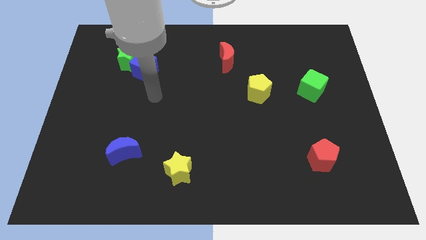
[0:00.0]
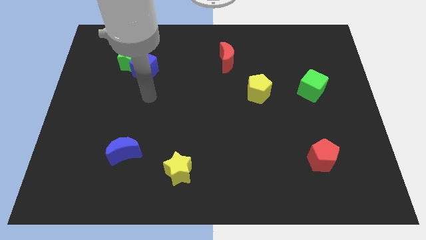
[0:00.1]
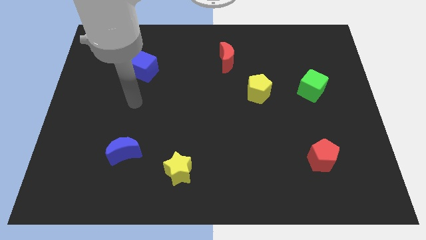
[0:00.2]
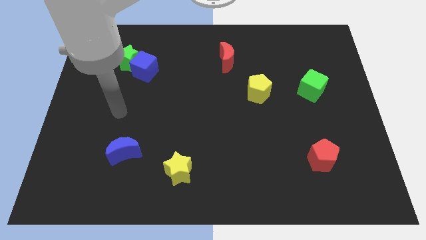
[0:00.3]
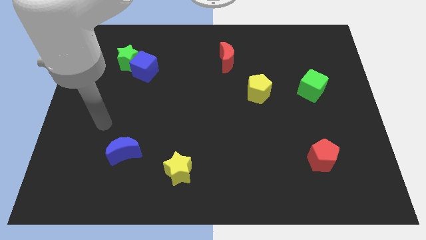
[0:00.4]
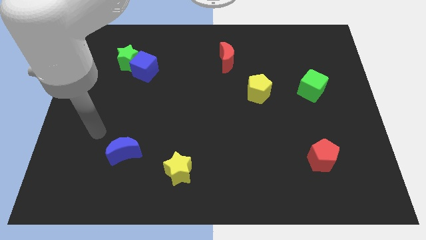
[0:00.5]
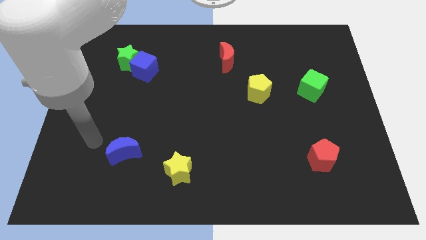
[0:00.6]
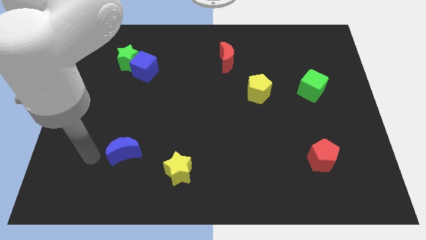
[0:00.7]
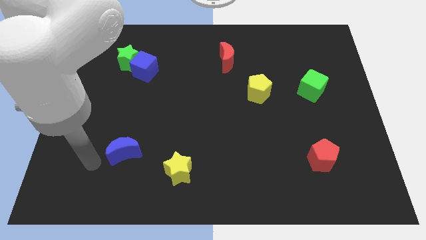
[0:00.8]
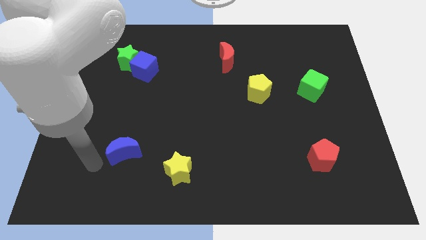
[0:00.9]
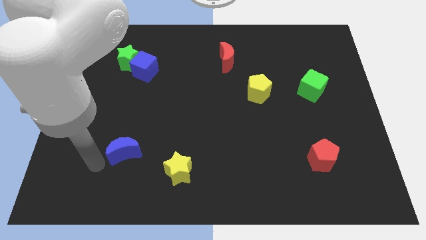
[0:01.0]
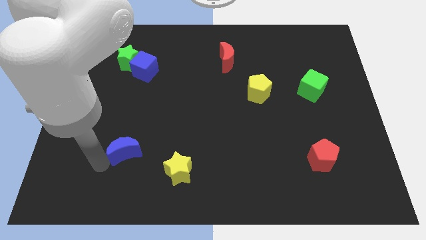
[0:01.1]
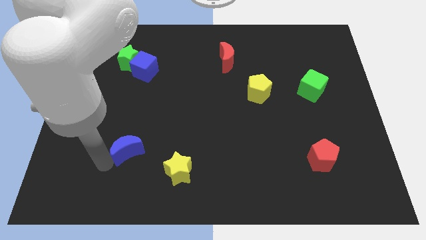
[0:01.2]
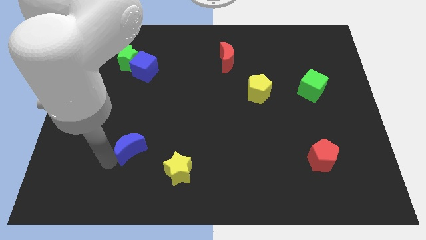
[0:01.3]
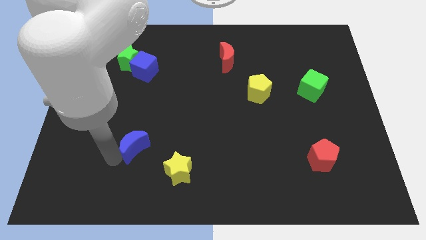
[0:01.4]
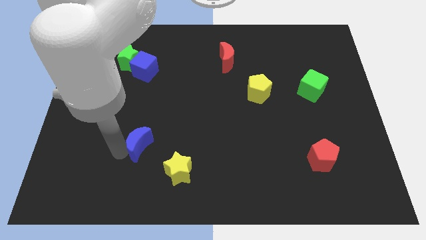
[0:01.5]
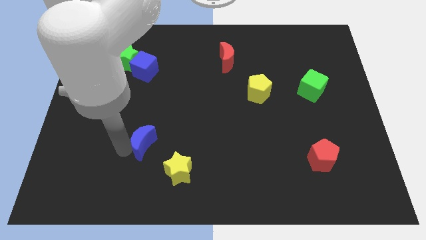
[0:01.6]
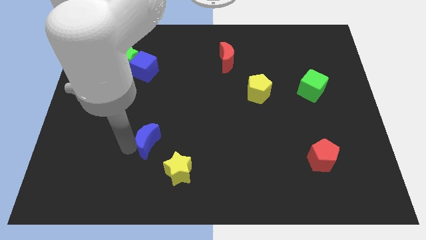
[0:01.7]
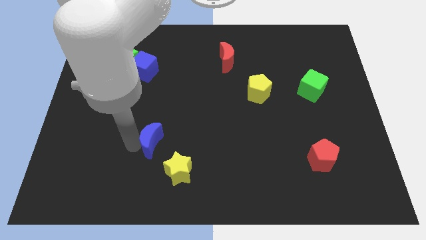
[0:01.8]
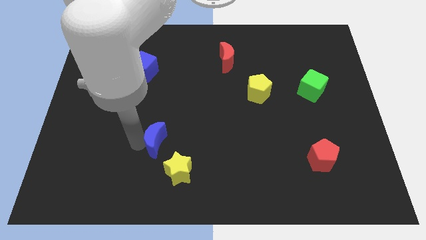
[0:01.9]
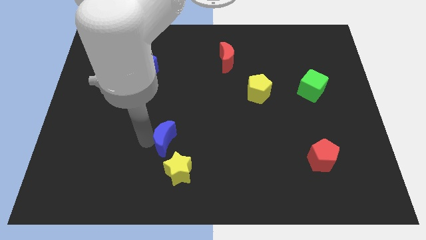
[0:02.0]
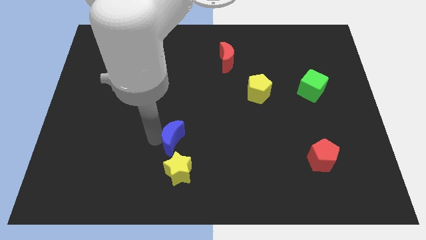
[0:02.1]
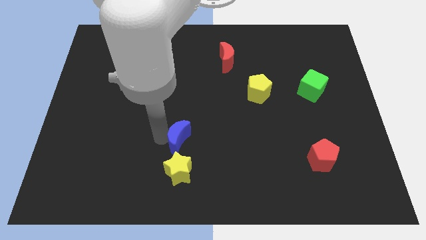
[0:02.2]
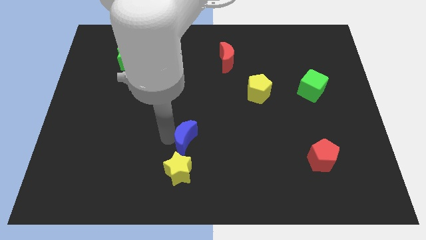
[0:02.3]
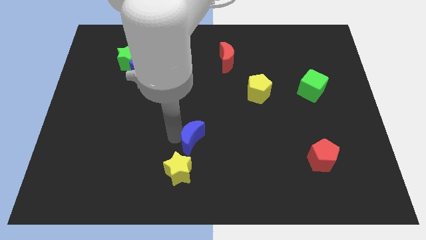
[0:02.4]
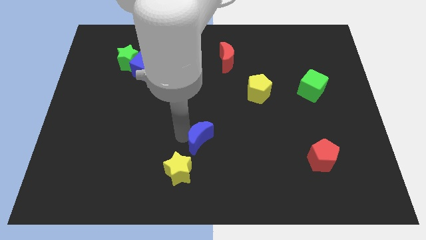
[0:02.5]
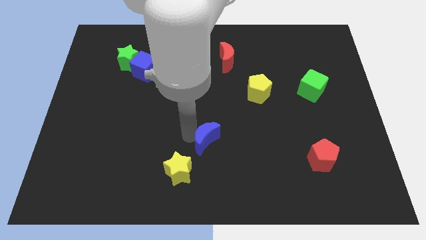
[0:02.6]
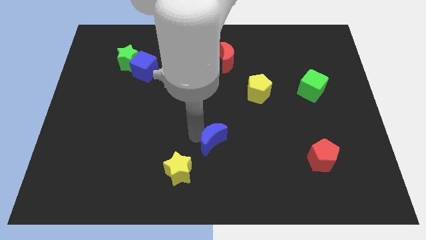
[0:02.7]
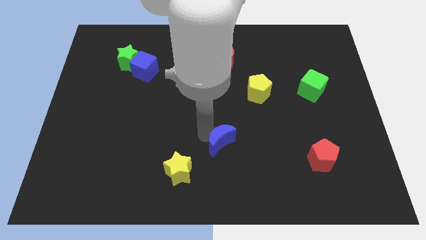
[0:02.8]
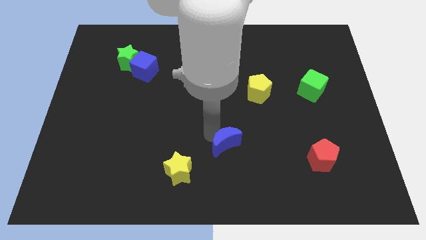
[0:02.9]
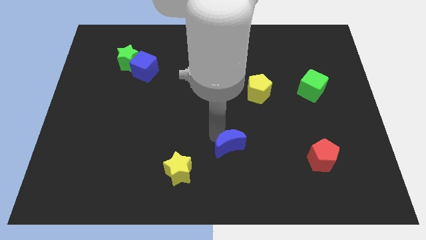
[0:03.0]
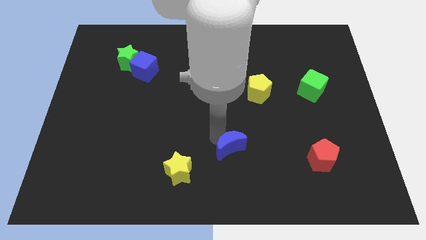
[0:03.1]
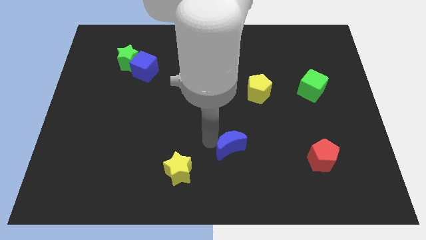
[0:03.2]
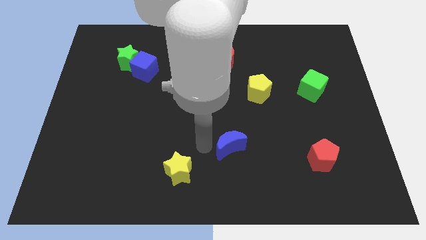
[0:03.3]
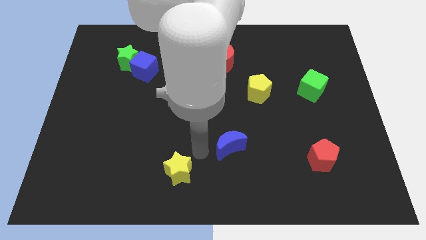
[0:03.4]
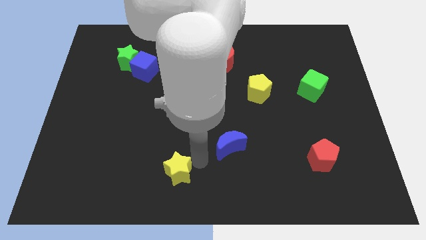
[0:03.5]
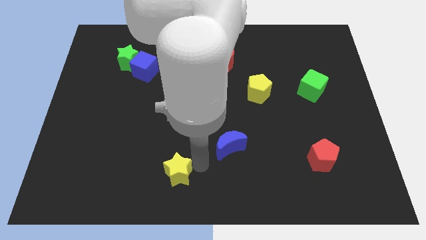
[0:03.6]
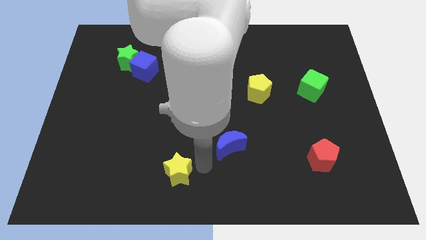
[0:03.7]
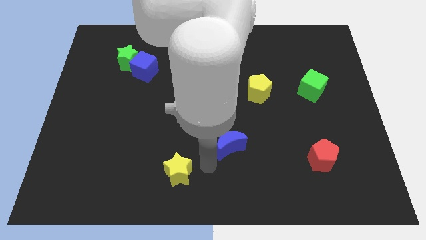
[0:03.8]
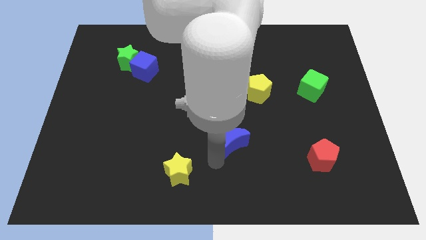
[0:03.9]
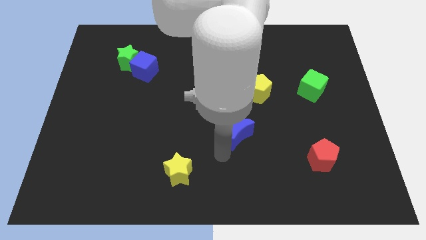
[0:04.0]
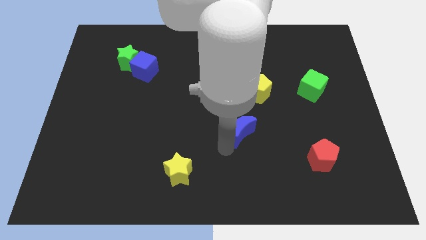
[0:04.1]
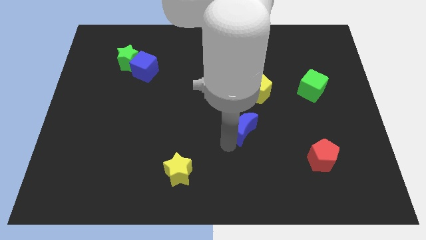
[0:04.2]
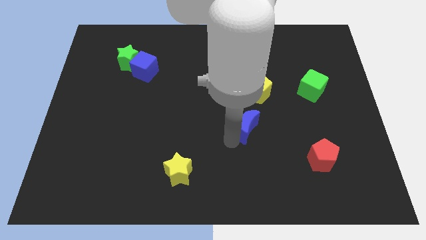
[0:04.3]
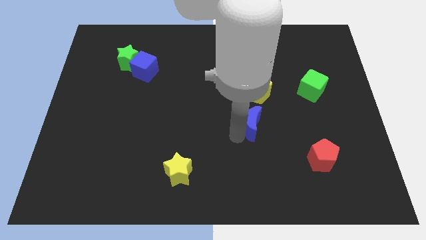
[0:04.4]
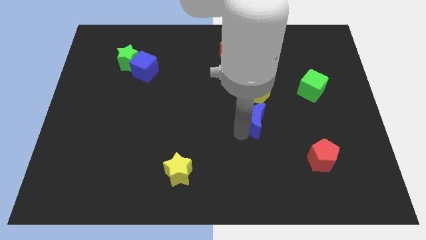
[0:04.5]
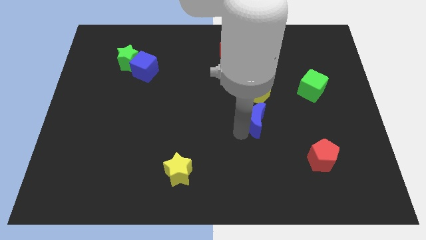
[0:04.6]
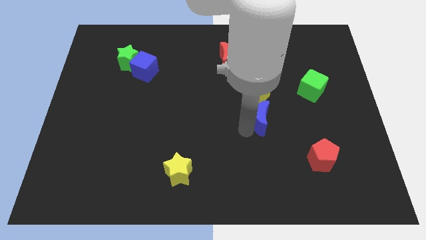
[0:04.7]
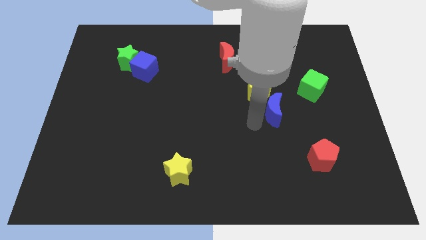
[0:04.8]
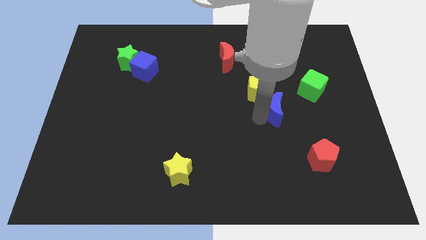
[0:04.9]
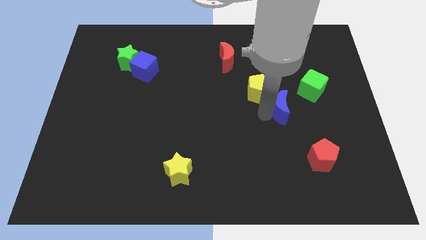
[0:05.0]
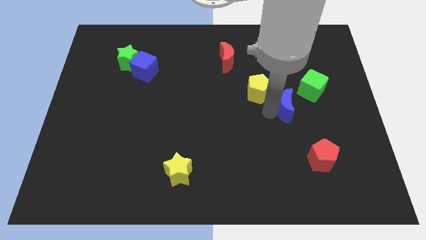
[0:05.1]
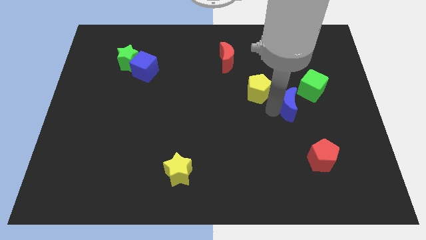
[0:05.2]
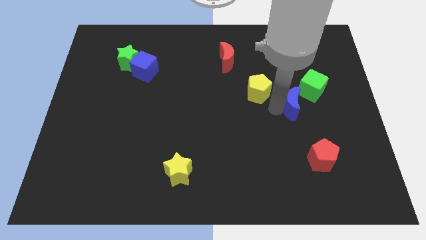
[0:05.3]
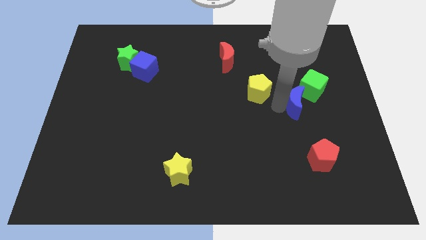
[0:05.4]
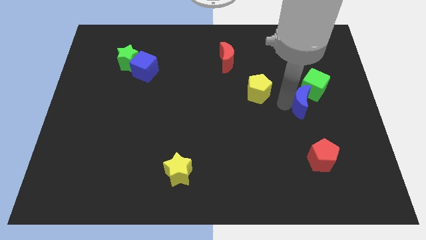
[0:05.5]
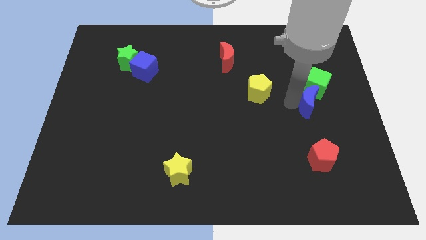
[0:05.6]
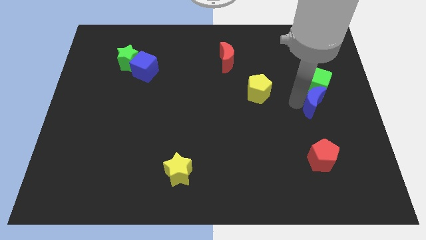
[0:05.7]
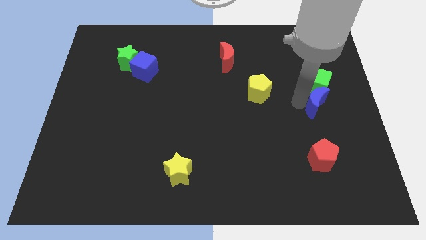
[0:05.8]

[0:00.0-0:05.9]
slide the blue moon towards the green cube

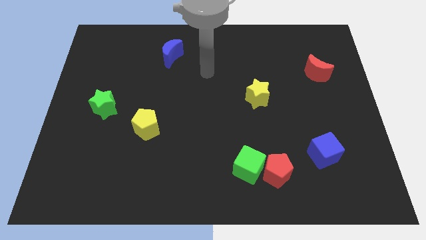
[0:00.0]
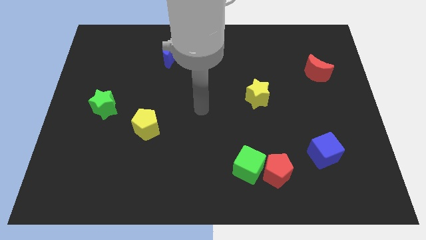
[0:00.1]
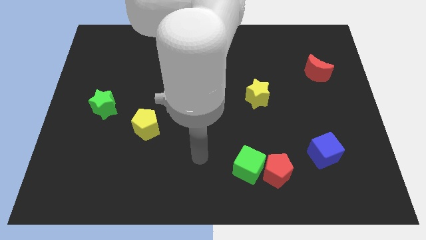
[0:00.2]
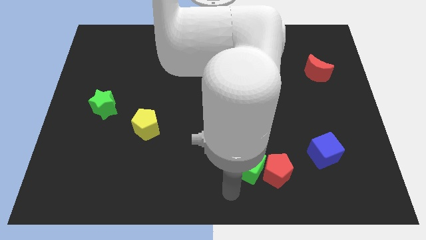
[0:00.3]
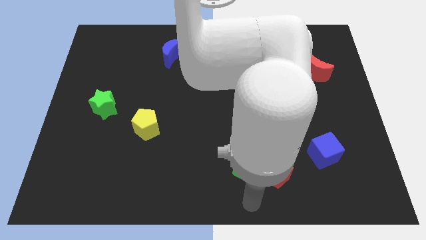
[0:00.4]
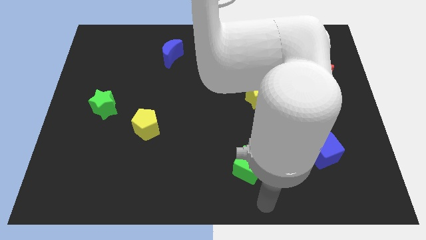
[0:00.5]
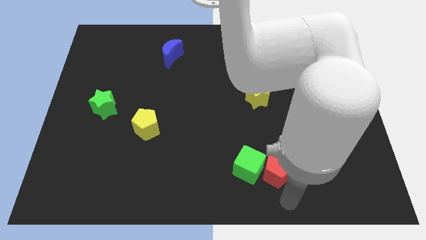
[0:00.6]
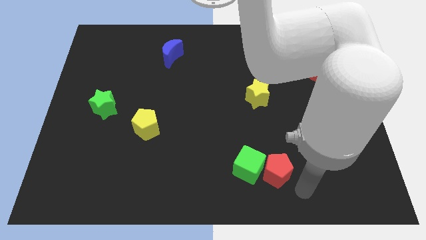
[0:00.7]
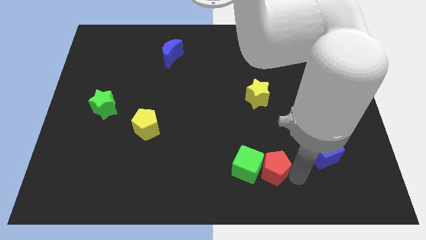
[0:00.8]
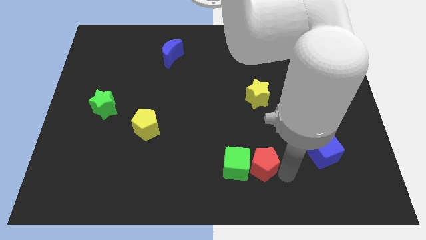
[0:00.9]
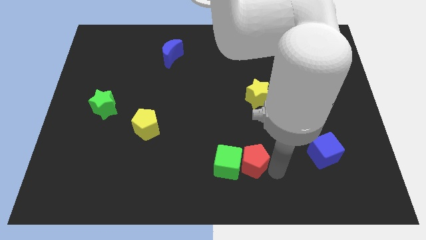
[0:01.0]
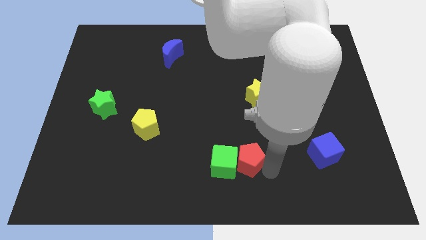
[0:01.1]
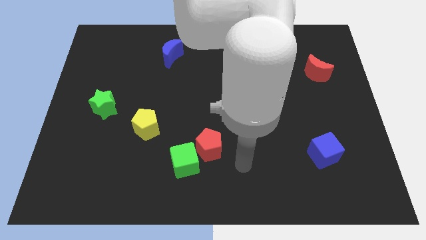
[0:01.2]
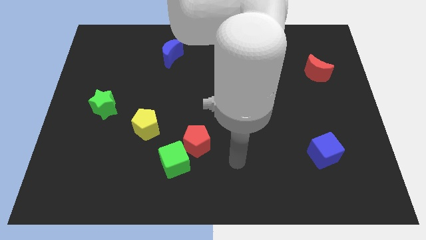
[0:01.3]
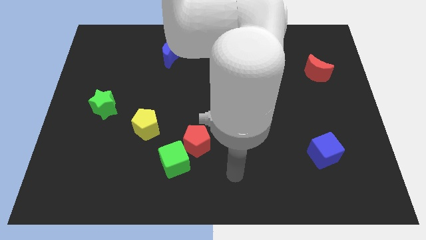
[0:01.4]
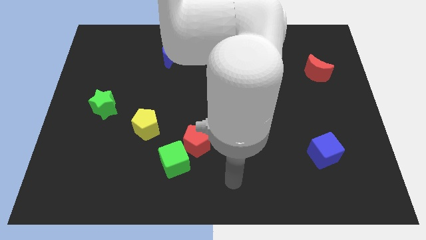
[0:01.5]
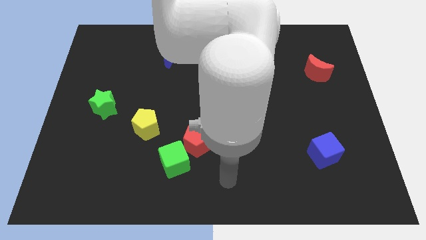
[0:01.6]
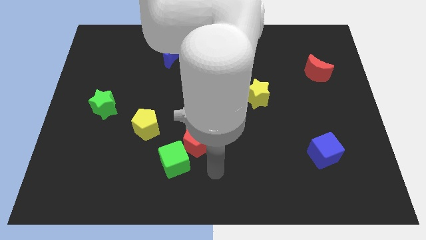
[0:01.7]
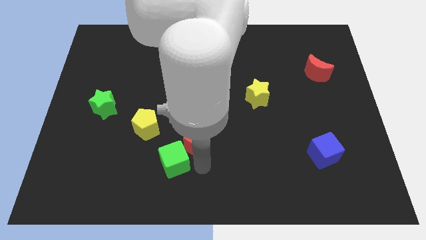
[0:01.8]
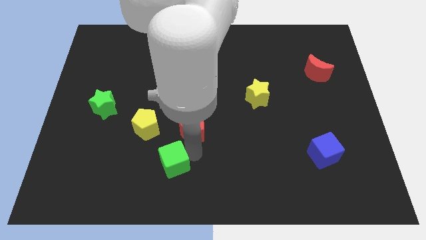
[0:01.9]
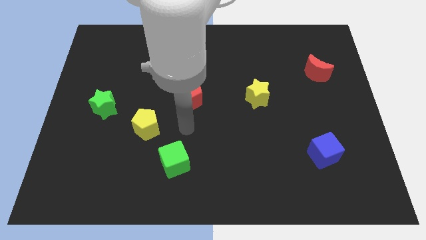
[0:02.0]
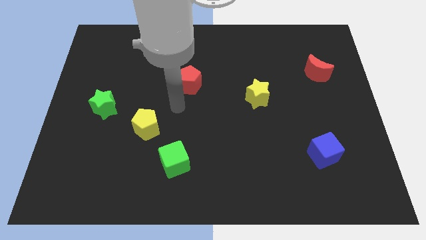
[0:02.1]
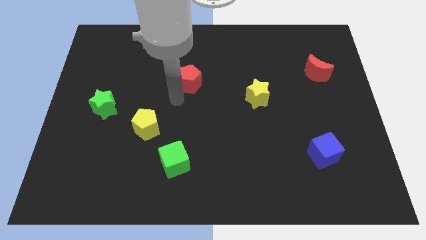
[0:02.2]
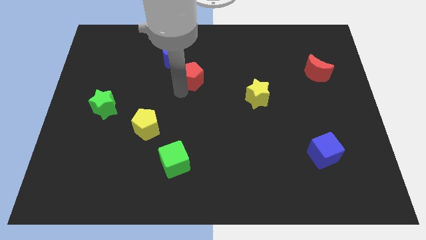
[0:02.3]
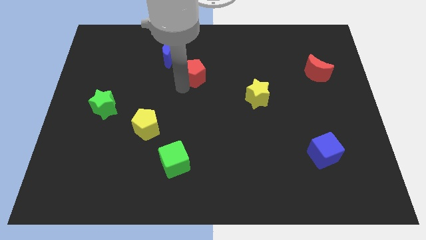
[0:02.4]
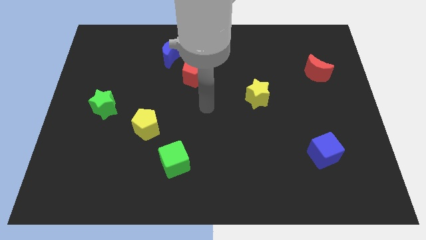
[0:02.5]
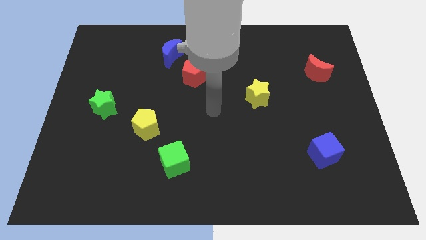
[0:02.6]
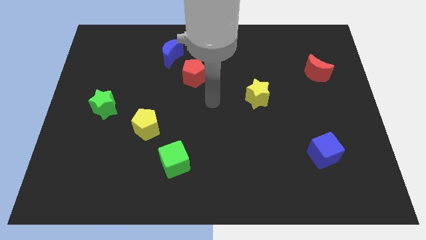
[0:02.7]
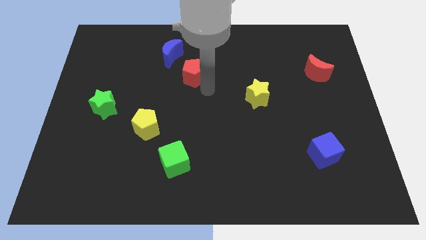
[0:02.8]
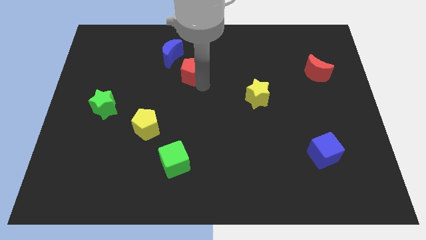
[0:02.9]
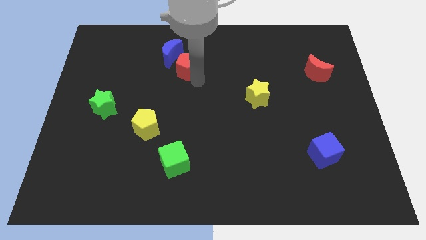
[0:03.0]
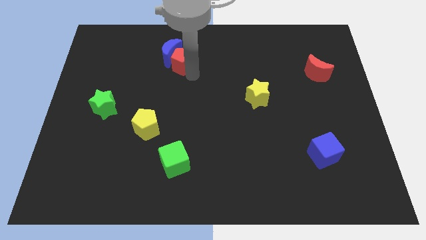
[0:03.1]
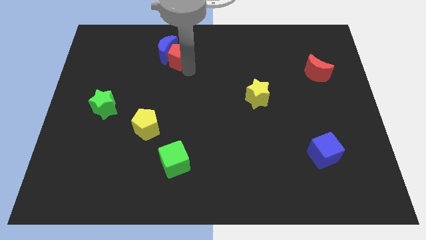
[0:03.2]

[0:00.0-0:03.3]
push the red pentagon to the blue moon
